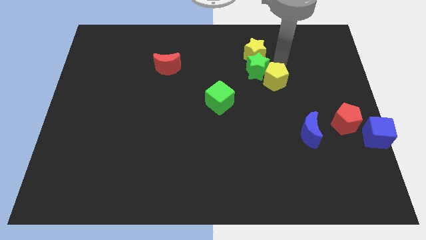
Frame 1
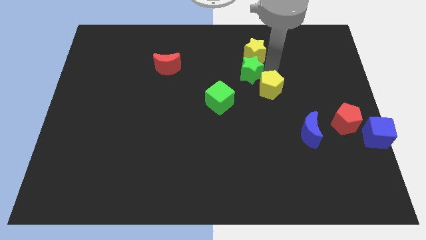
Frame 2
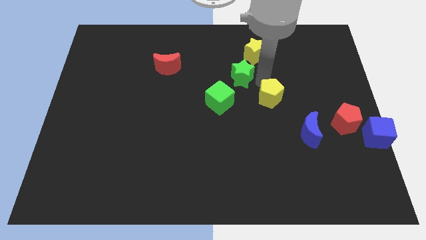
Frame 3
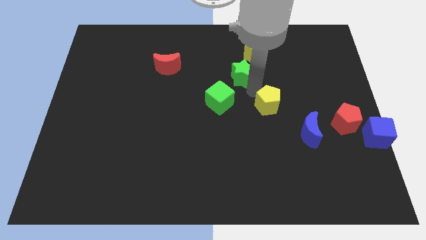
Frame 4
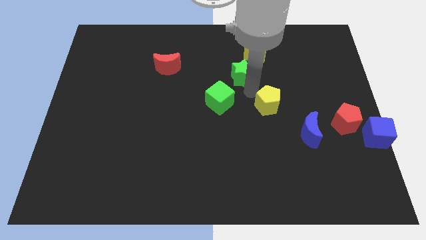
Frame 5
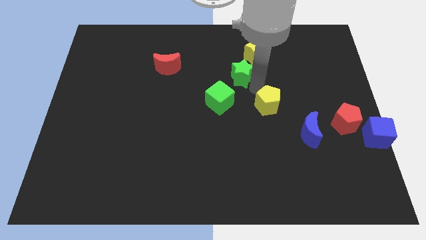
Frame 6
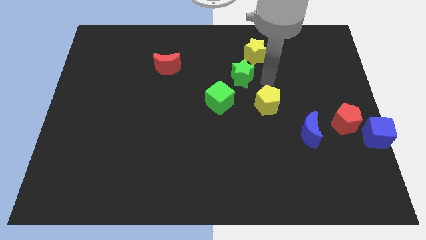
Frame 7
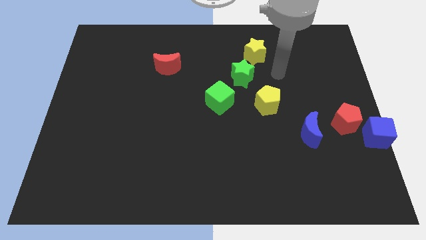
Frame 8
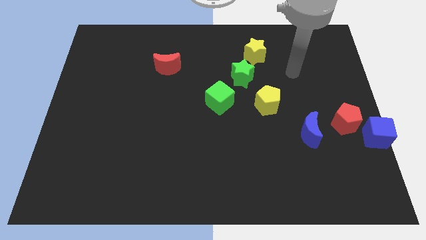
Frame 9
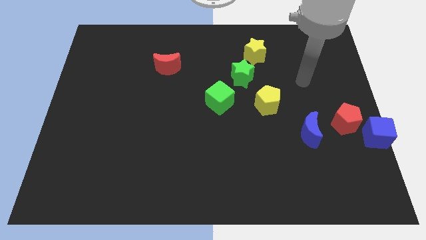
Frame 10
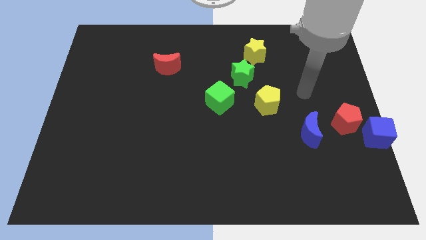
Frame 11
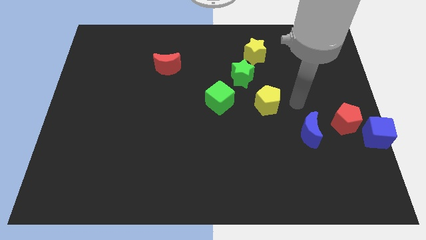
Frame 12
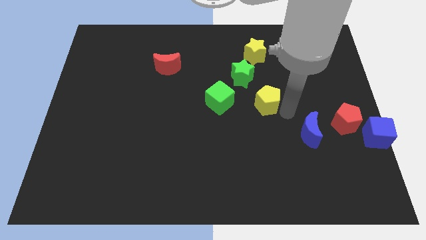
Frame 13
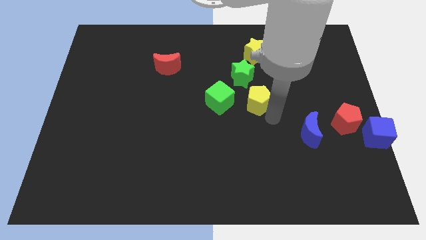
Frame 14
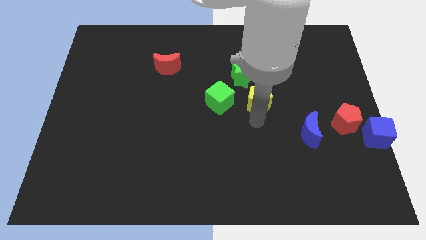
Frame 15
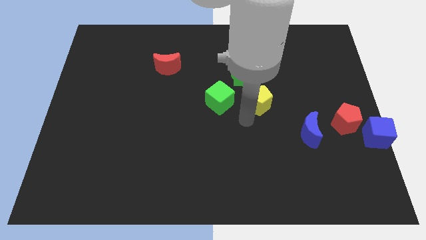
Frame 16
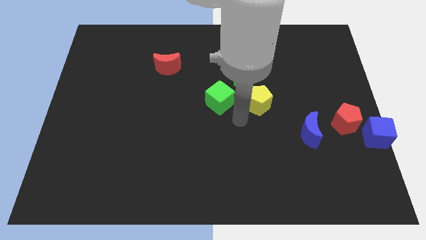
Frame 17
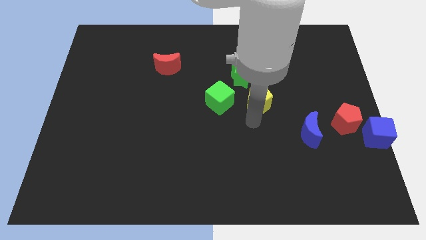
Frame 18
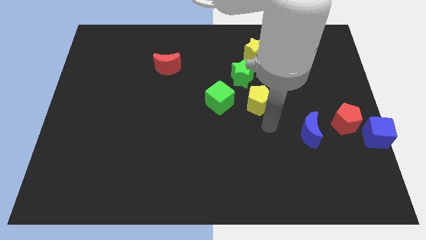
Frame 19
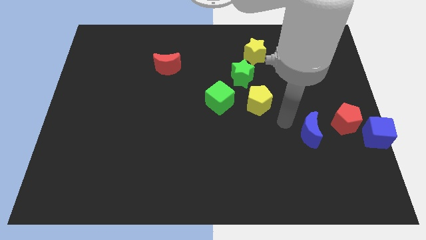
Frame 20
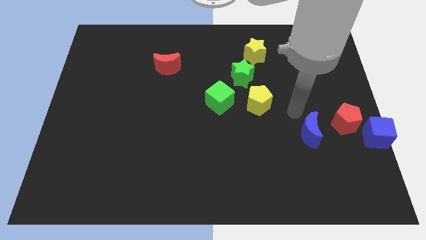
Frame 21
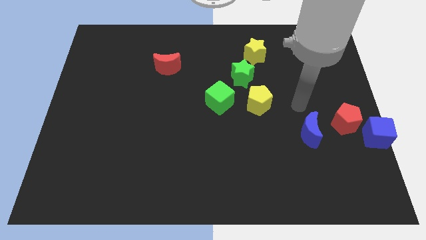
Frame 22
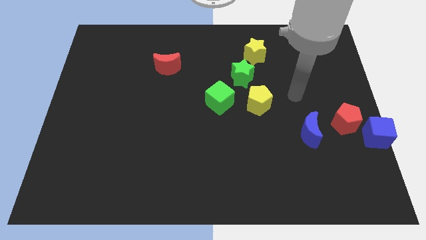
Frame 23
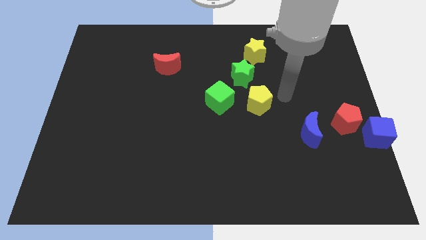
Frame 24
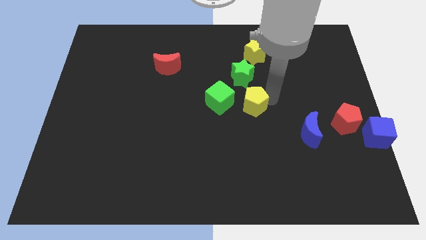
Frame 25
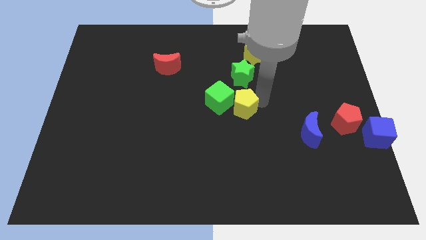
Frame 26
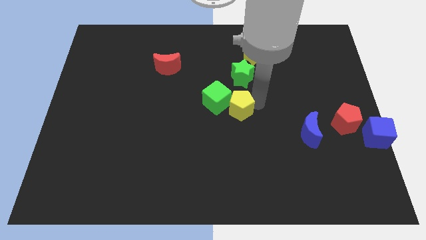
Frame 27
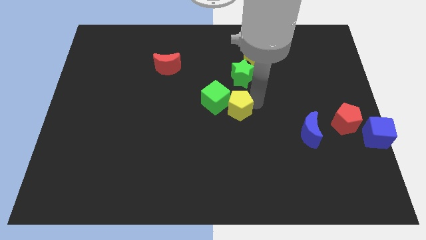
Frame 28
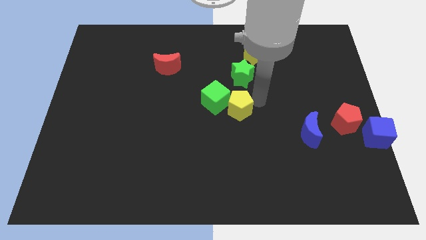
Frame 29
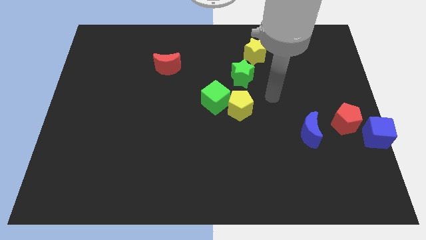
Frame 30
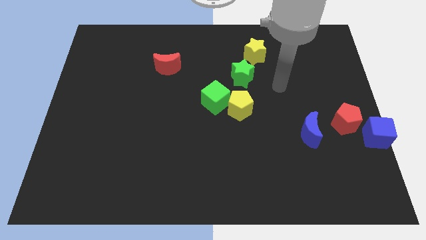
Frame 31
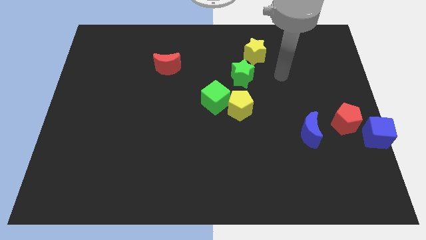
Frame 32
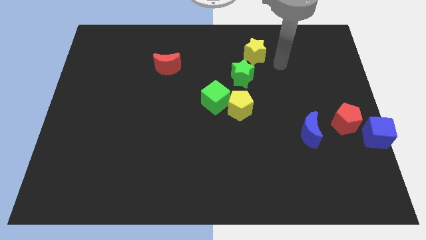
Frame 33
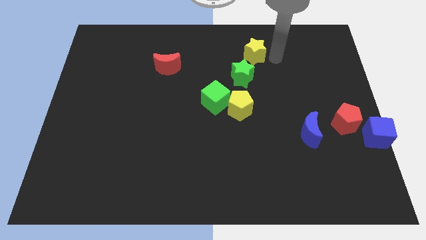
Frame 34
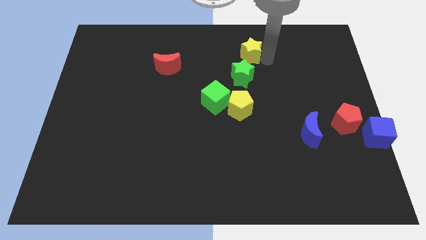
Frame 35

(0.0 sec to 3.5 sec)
place the yellow pentagon parallel to the green cube

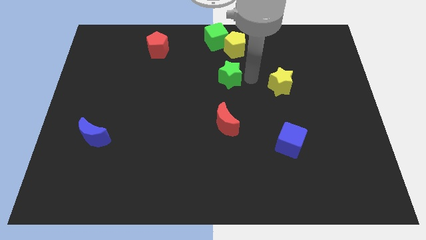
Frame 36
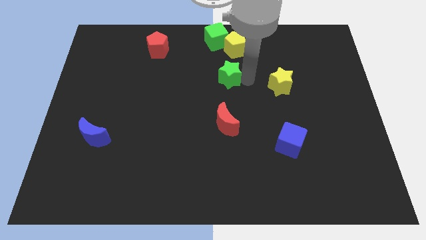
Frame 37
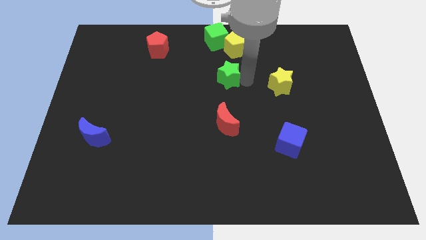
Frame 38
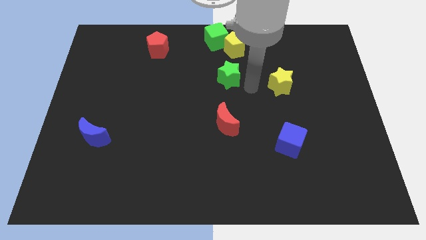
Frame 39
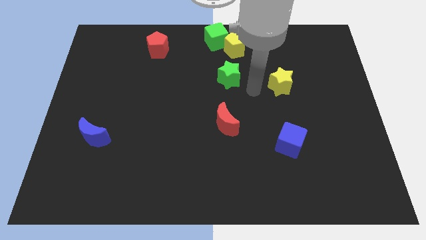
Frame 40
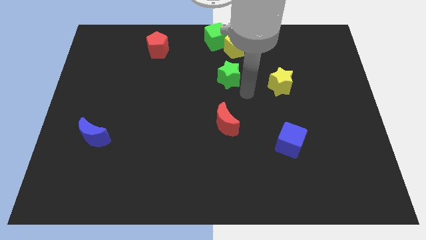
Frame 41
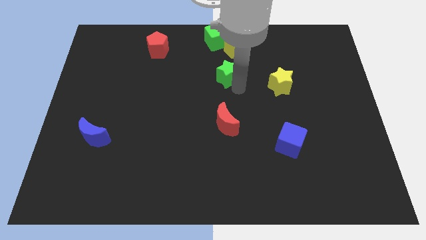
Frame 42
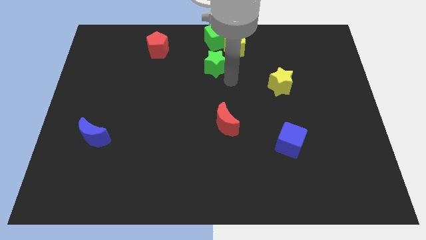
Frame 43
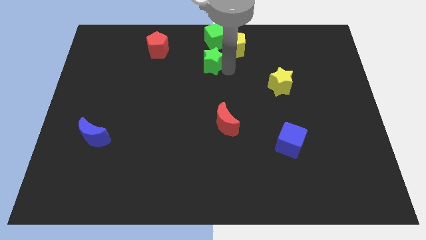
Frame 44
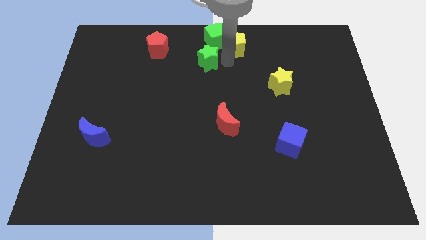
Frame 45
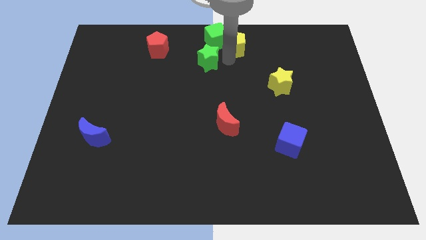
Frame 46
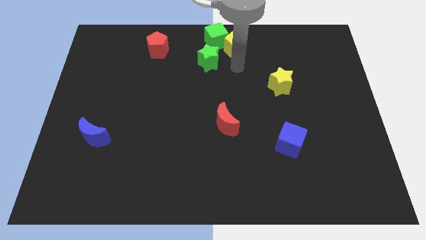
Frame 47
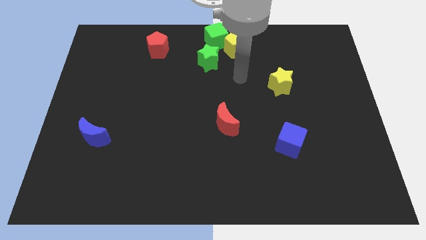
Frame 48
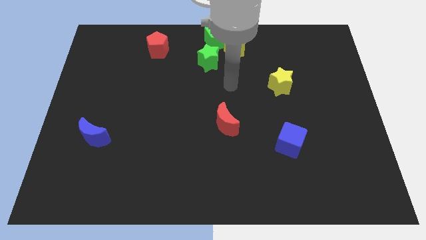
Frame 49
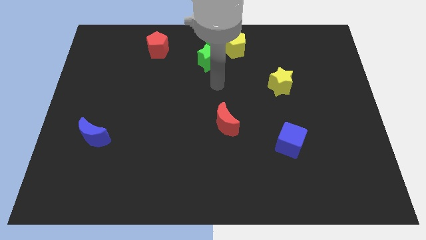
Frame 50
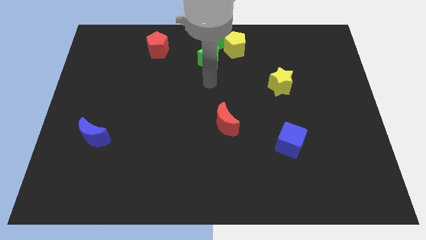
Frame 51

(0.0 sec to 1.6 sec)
place green star below green cube

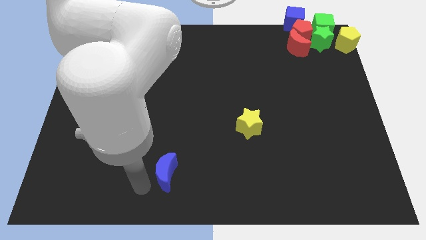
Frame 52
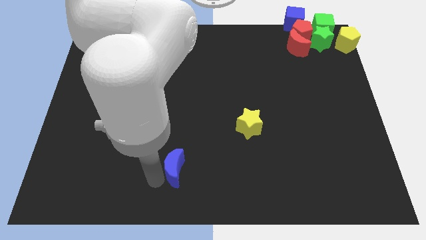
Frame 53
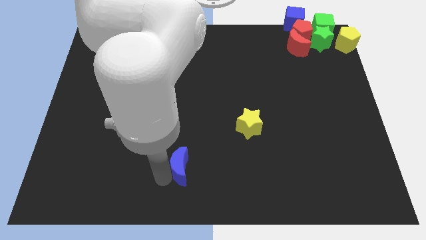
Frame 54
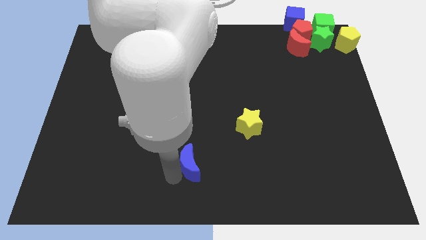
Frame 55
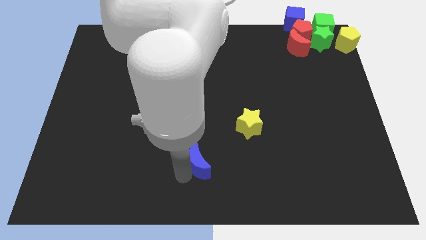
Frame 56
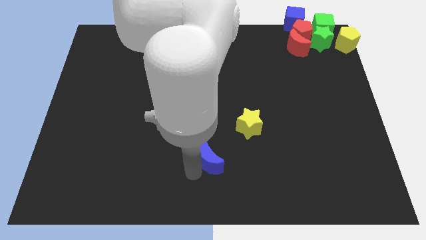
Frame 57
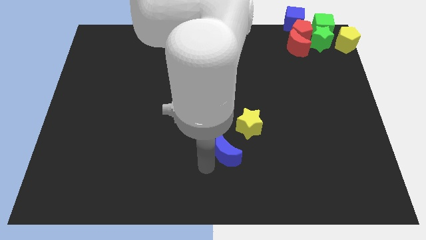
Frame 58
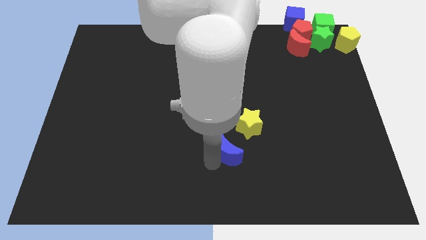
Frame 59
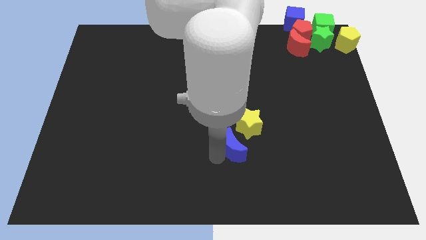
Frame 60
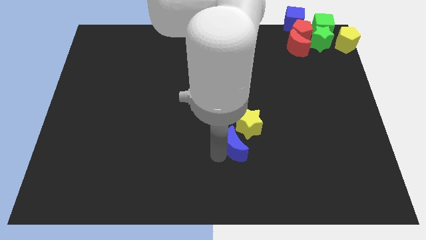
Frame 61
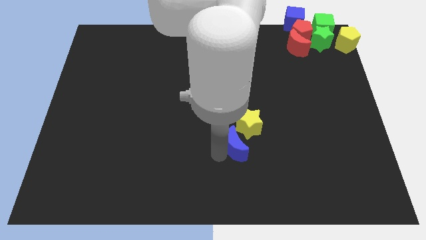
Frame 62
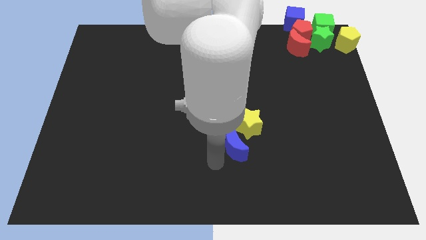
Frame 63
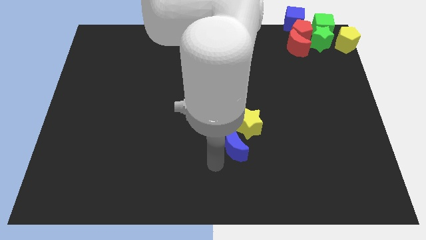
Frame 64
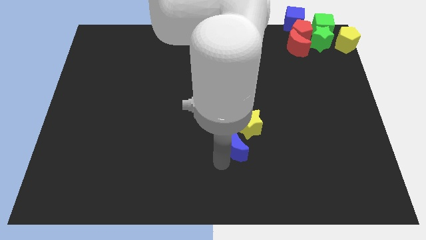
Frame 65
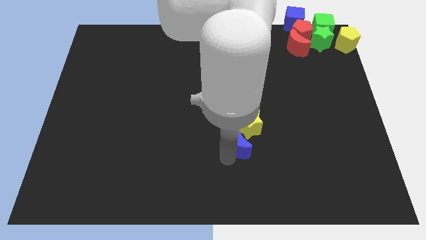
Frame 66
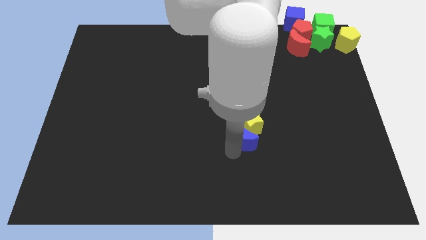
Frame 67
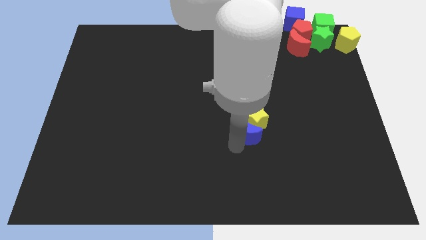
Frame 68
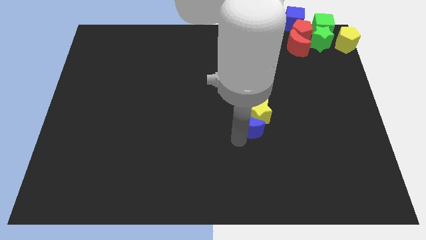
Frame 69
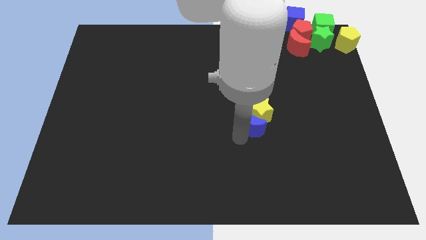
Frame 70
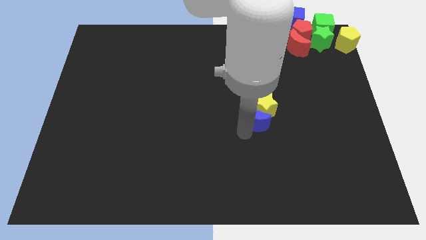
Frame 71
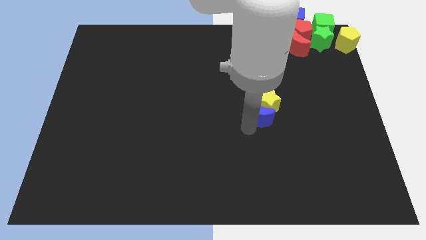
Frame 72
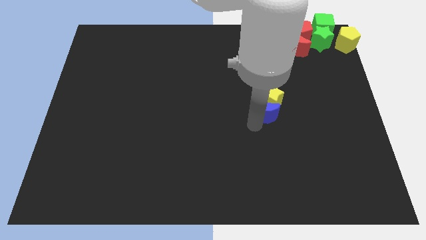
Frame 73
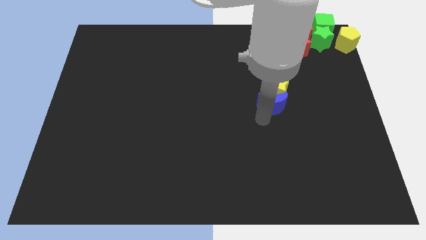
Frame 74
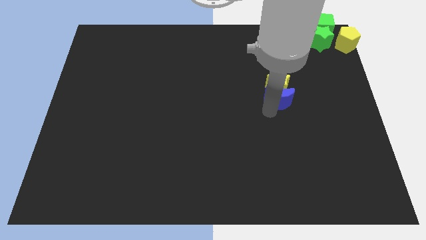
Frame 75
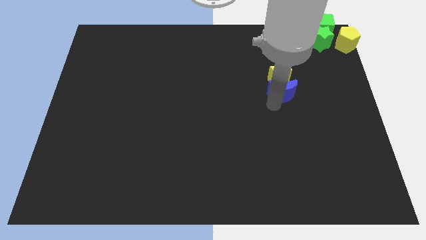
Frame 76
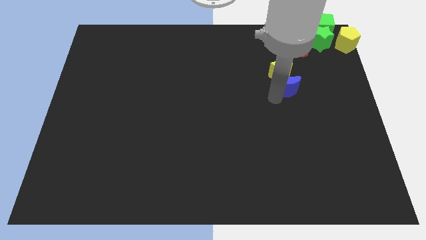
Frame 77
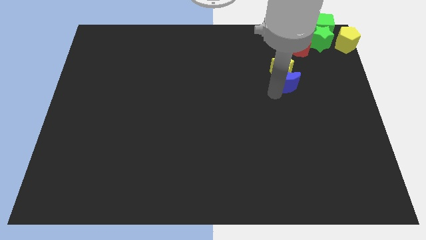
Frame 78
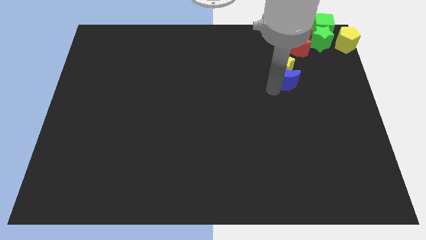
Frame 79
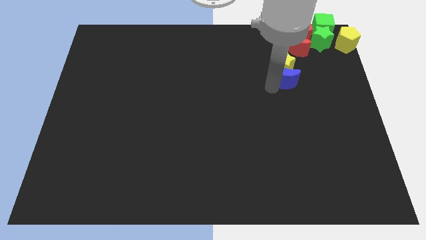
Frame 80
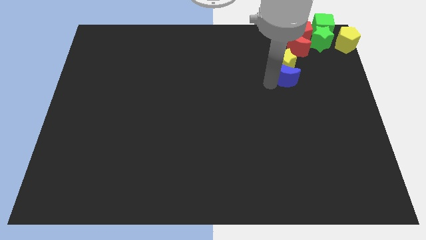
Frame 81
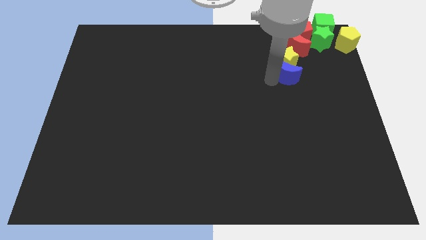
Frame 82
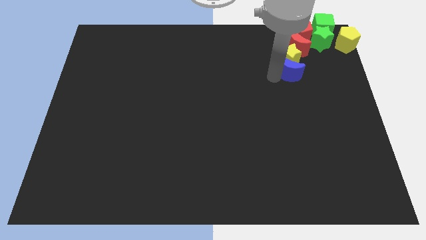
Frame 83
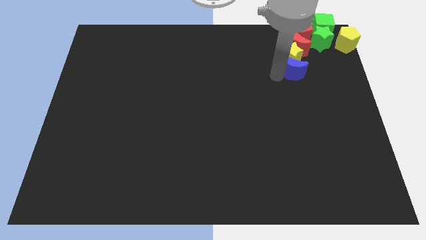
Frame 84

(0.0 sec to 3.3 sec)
push the blue crescent along with the yellow star to the left of the red crescent

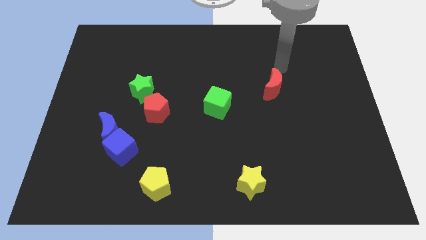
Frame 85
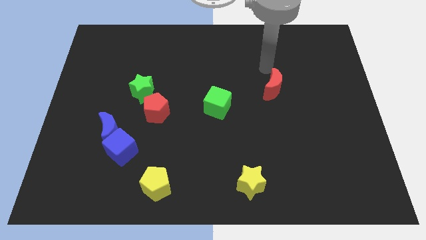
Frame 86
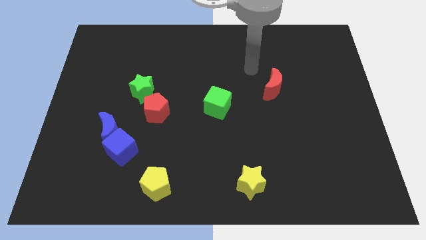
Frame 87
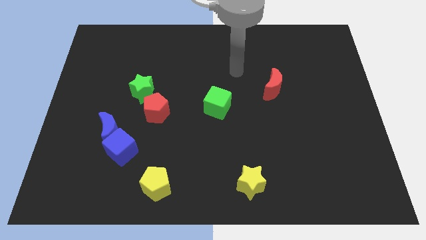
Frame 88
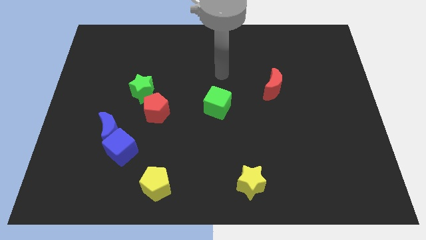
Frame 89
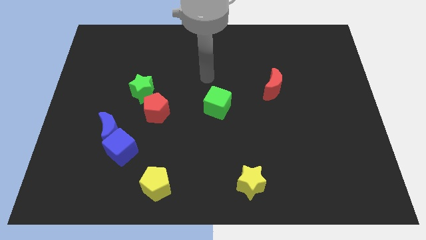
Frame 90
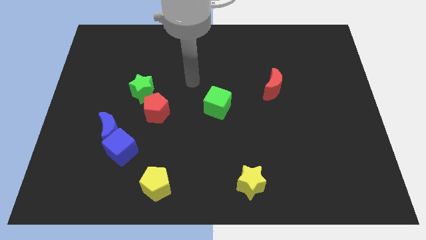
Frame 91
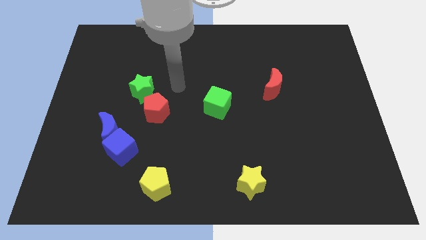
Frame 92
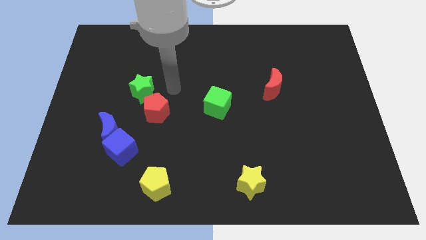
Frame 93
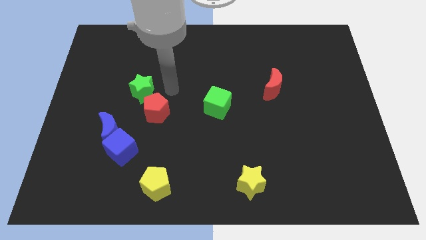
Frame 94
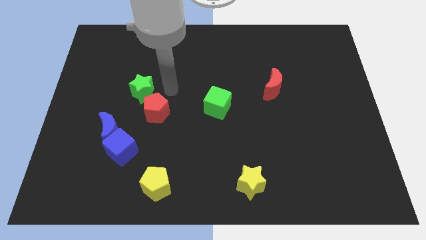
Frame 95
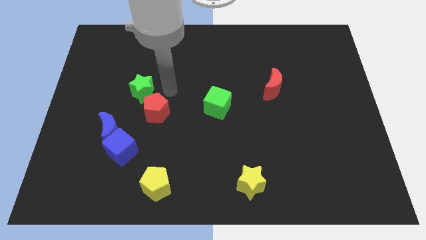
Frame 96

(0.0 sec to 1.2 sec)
put your arm at the top right side of red pentagon
